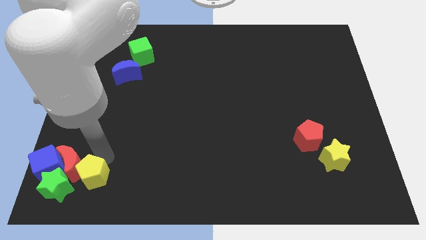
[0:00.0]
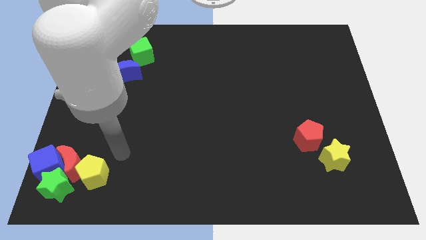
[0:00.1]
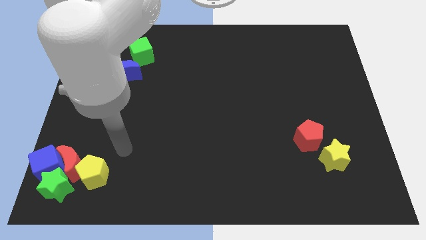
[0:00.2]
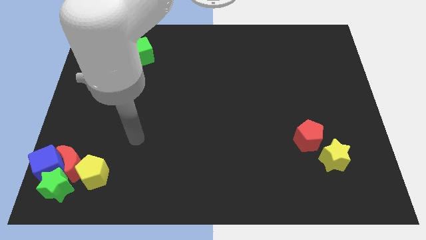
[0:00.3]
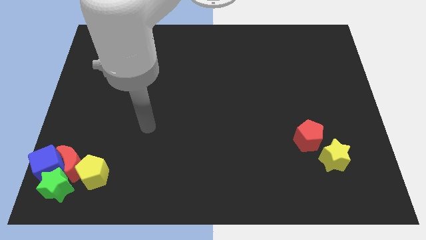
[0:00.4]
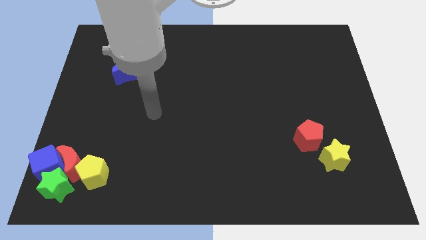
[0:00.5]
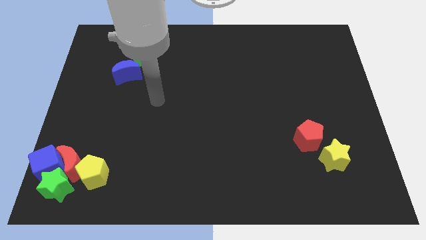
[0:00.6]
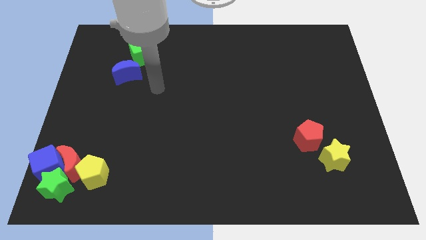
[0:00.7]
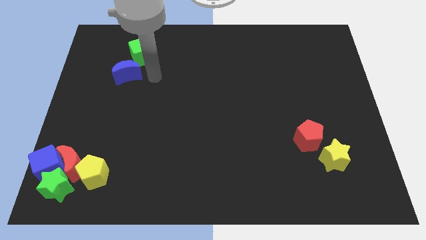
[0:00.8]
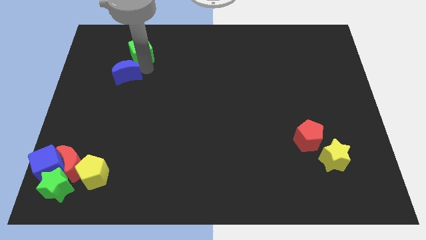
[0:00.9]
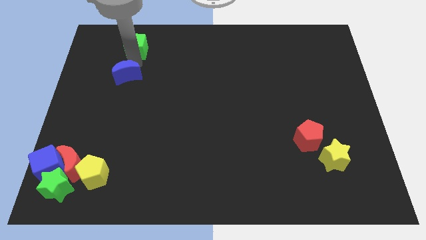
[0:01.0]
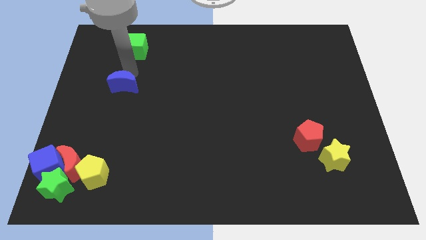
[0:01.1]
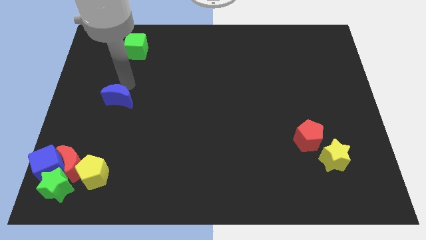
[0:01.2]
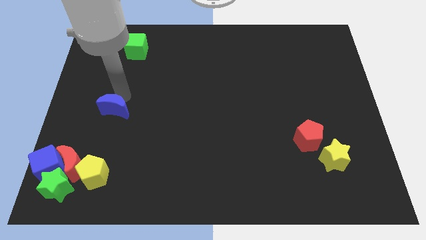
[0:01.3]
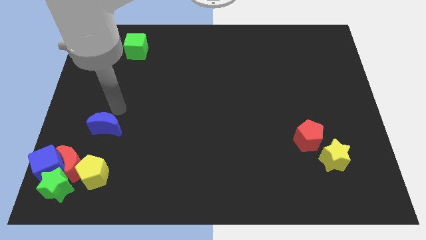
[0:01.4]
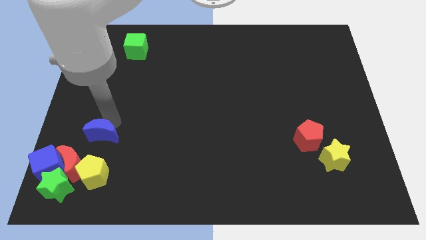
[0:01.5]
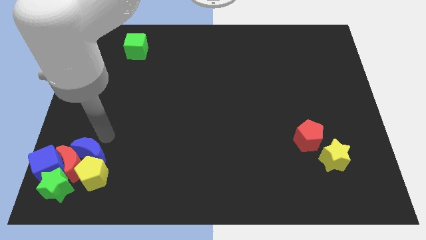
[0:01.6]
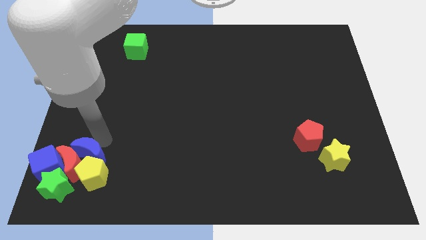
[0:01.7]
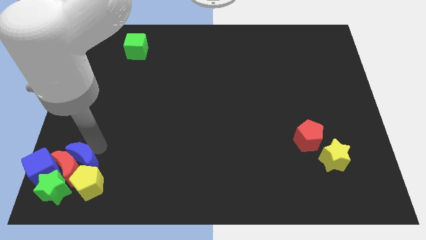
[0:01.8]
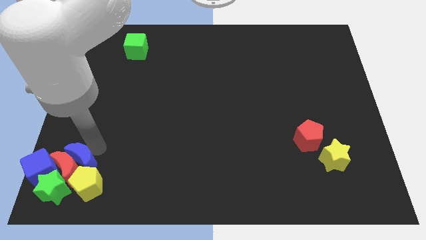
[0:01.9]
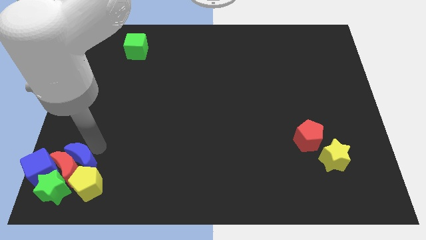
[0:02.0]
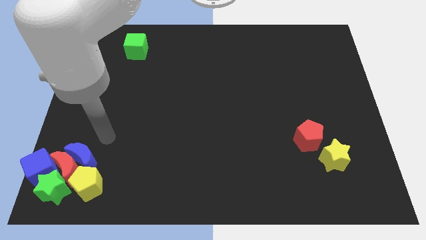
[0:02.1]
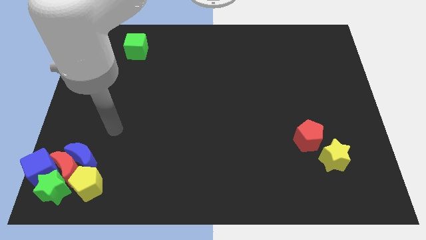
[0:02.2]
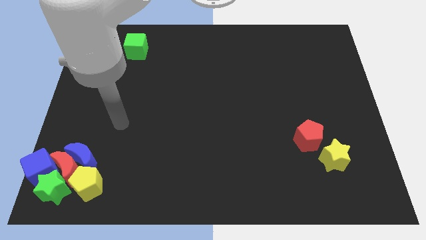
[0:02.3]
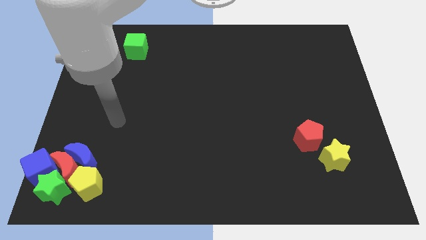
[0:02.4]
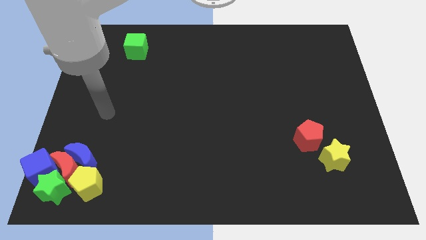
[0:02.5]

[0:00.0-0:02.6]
push the blue crescent into the the red crescent

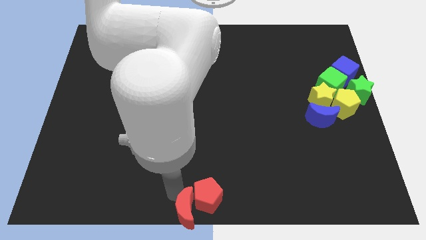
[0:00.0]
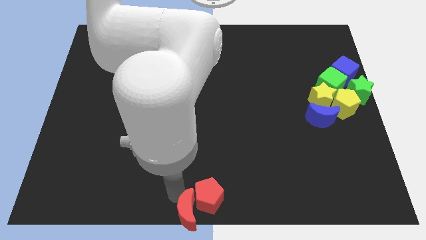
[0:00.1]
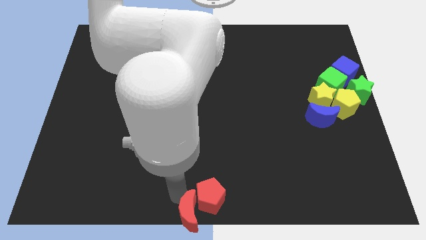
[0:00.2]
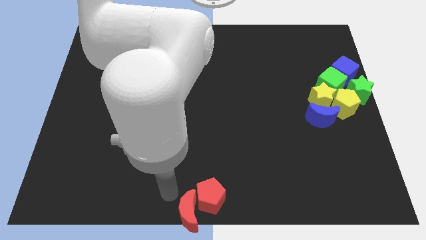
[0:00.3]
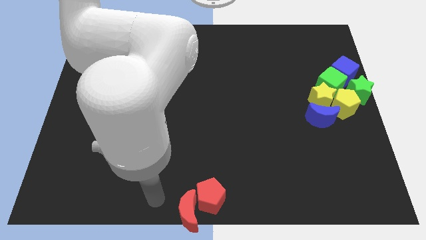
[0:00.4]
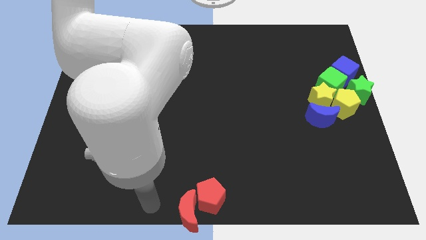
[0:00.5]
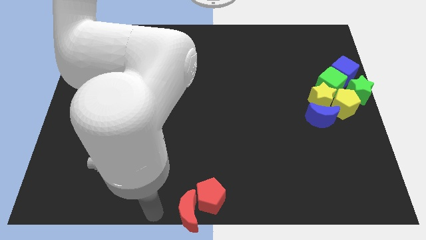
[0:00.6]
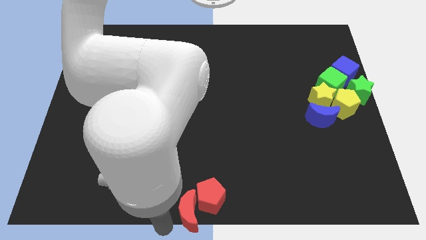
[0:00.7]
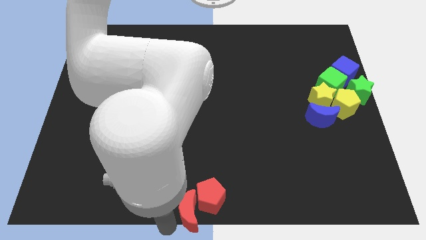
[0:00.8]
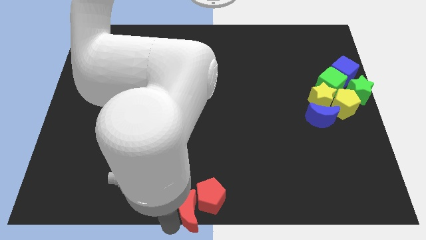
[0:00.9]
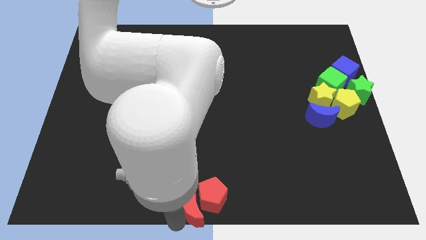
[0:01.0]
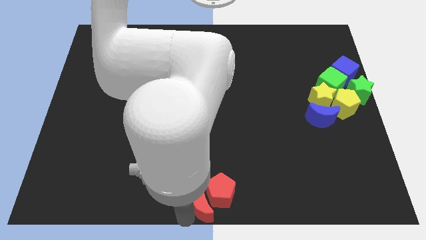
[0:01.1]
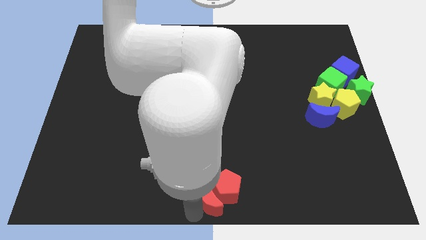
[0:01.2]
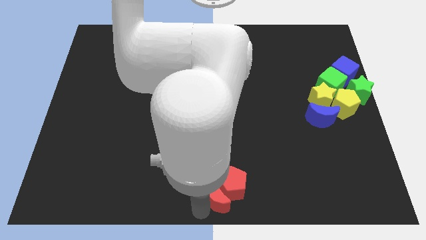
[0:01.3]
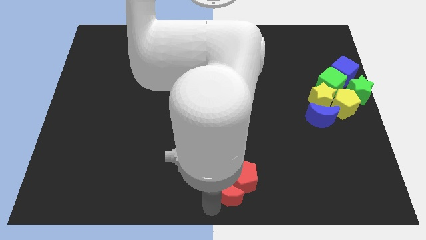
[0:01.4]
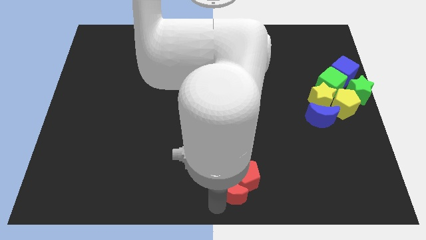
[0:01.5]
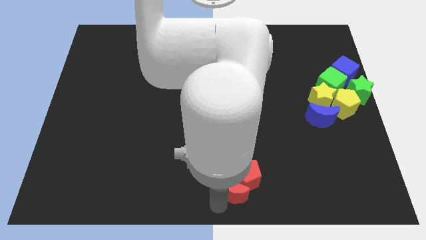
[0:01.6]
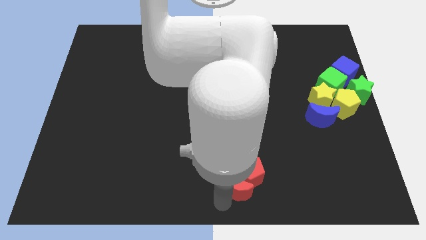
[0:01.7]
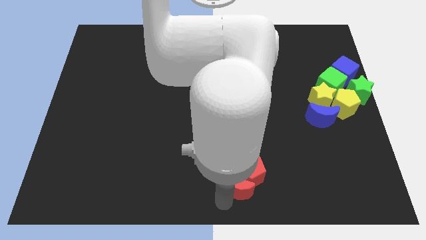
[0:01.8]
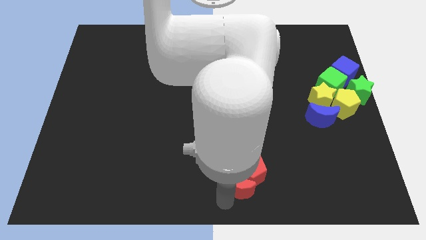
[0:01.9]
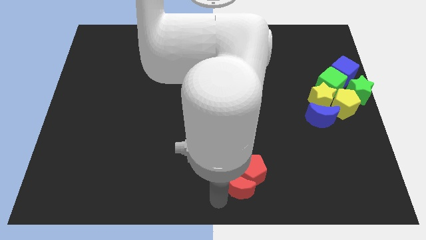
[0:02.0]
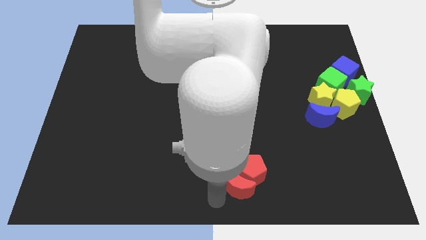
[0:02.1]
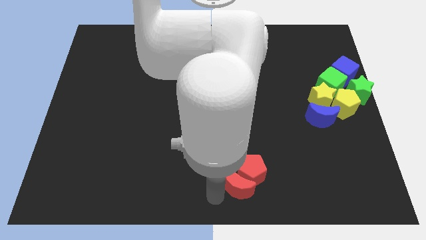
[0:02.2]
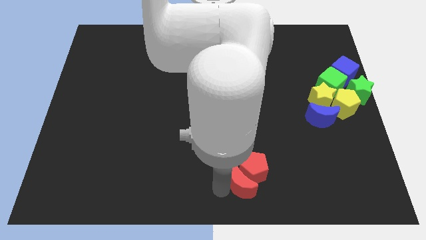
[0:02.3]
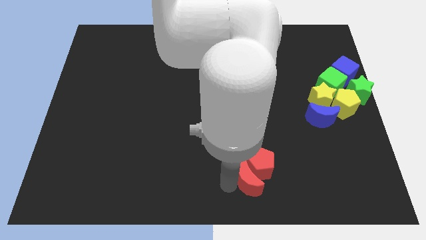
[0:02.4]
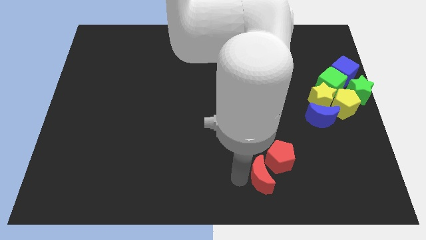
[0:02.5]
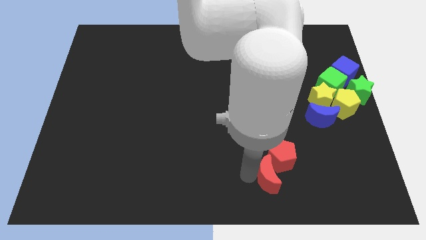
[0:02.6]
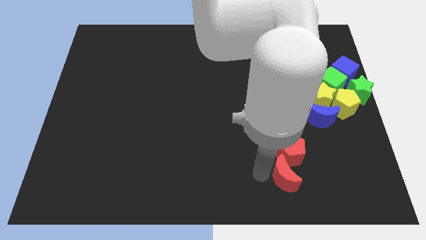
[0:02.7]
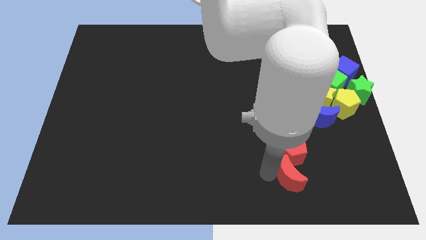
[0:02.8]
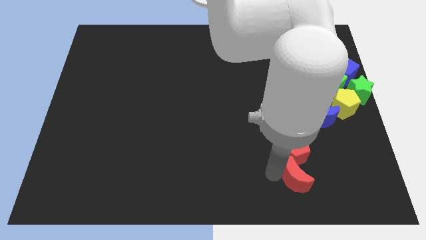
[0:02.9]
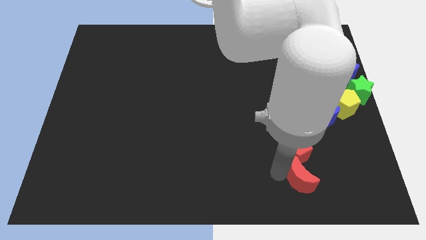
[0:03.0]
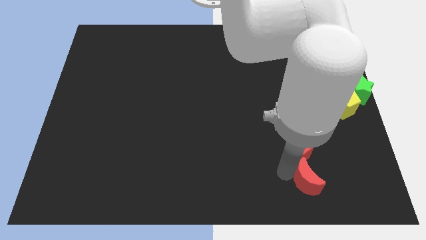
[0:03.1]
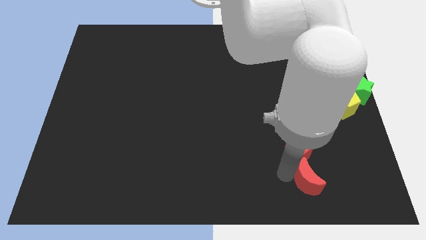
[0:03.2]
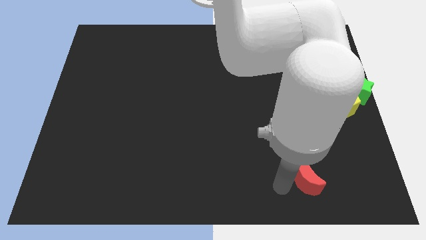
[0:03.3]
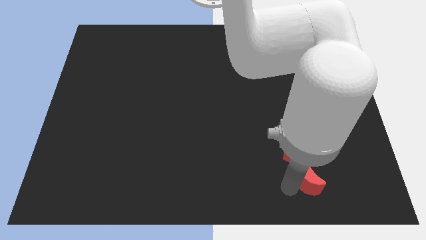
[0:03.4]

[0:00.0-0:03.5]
drag the red pentagon with the help of red crescent to the bottom left of the board

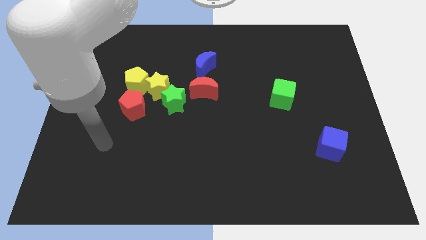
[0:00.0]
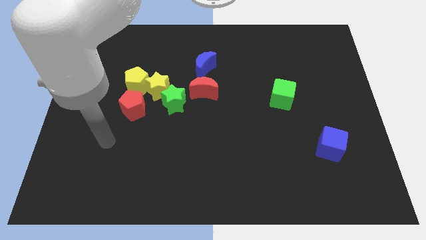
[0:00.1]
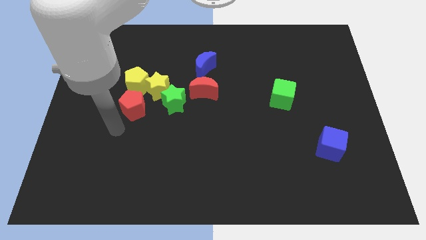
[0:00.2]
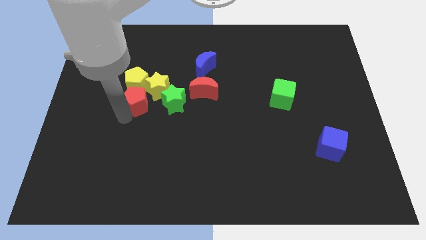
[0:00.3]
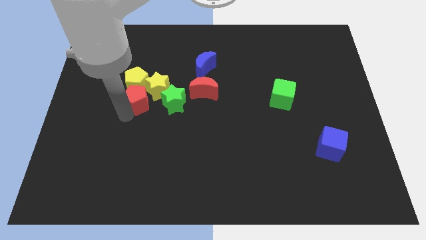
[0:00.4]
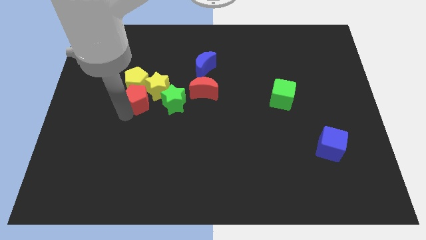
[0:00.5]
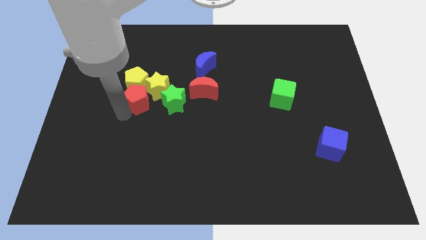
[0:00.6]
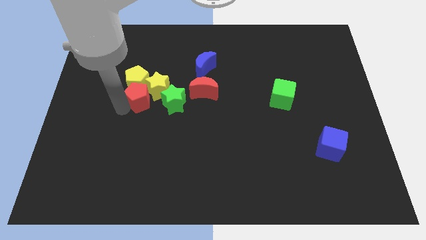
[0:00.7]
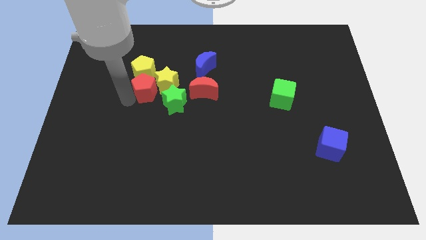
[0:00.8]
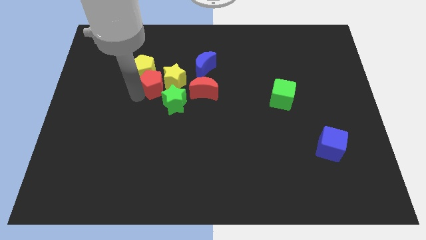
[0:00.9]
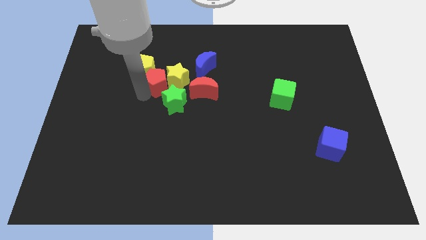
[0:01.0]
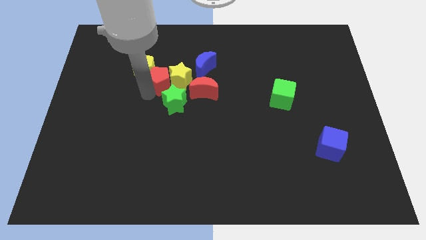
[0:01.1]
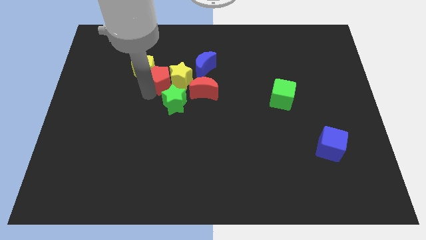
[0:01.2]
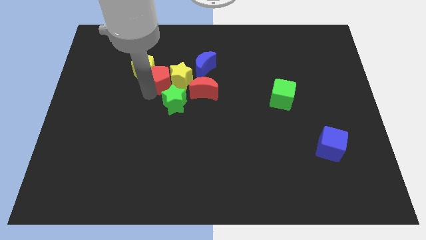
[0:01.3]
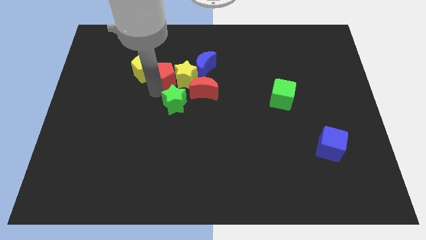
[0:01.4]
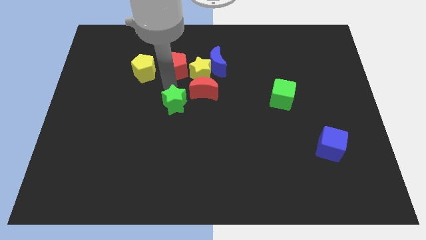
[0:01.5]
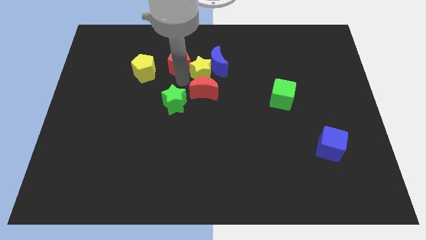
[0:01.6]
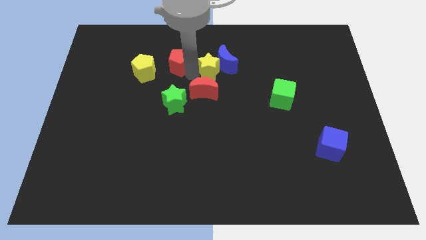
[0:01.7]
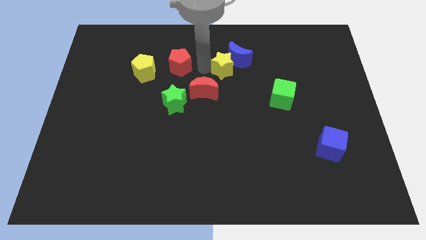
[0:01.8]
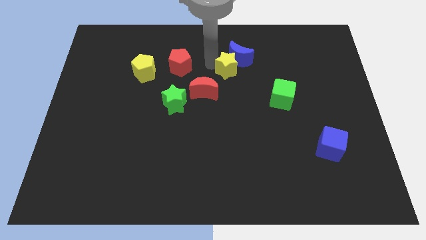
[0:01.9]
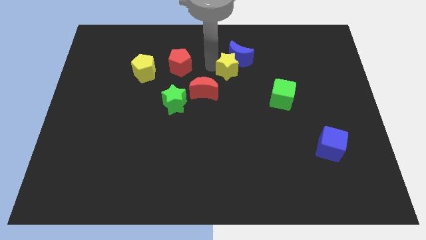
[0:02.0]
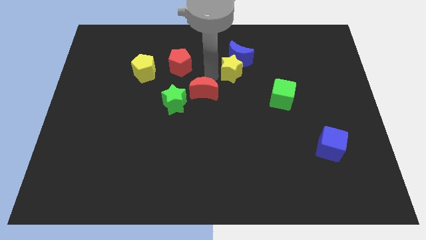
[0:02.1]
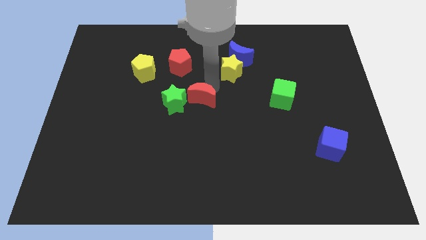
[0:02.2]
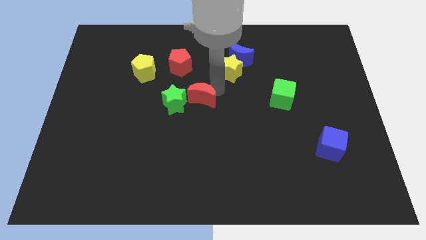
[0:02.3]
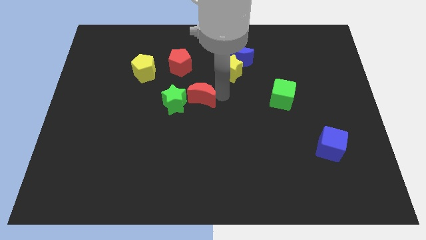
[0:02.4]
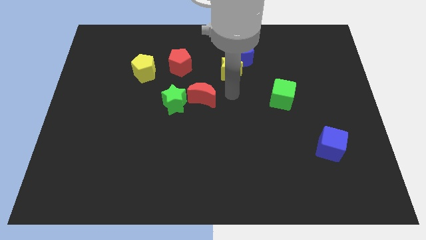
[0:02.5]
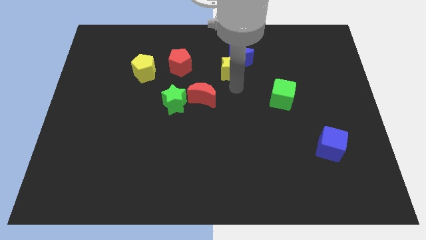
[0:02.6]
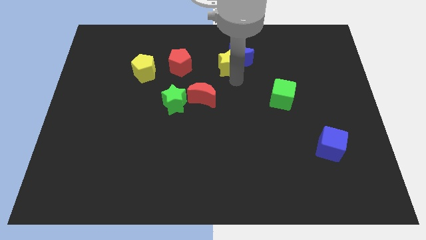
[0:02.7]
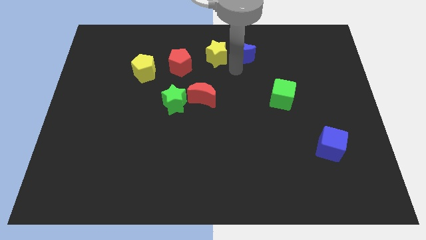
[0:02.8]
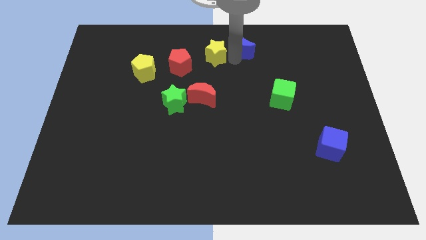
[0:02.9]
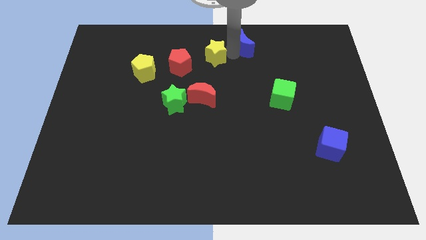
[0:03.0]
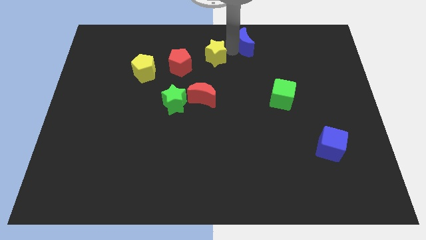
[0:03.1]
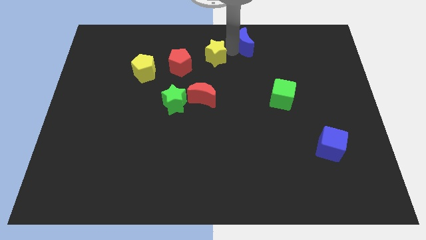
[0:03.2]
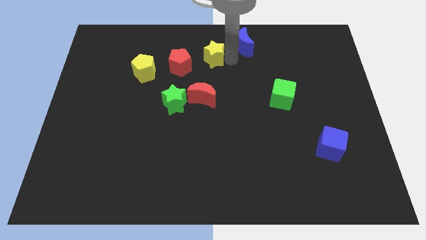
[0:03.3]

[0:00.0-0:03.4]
separate the red pentagon and the yellow pentagon from the group of blocks
